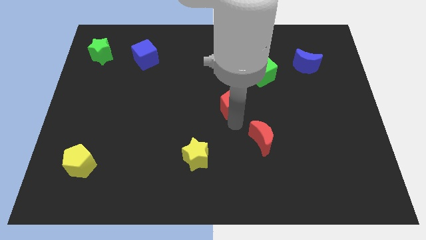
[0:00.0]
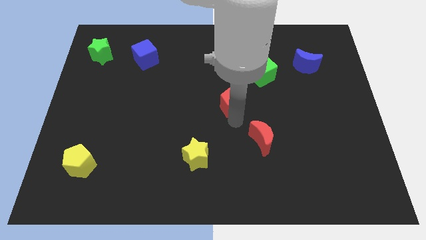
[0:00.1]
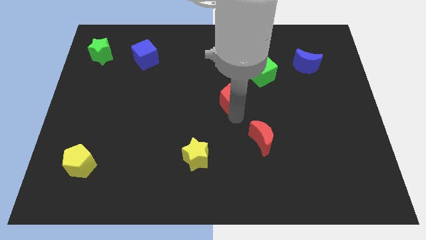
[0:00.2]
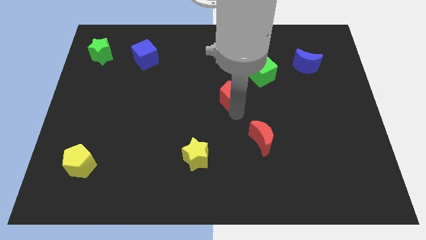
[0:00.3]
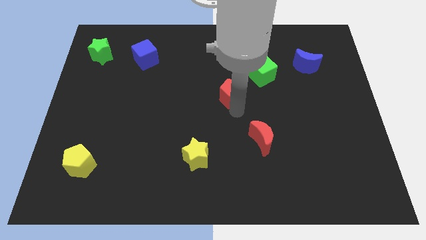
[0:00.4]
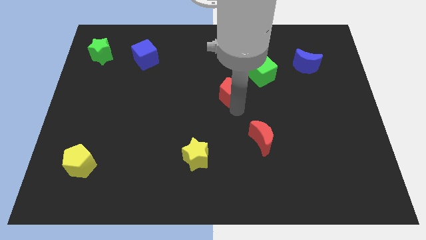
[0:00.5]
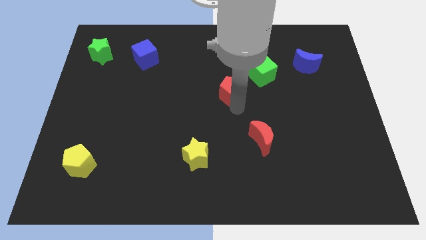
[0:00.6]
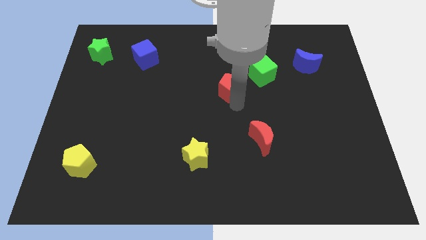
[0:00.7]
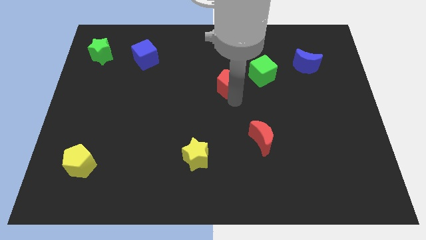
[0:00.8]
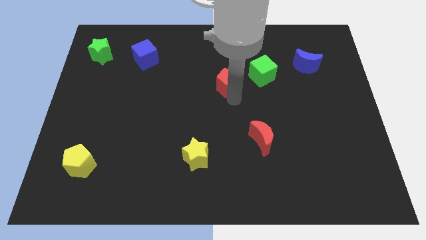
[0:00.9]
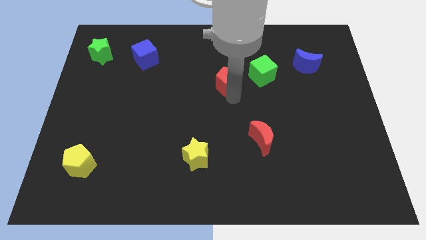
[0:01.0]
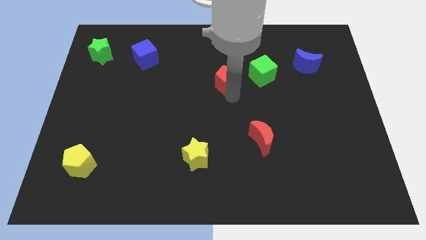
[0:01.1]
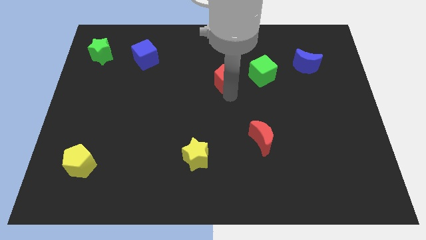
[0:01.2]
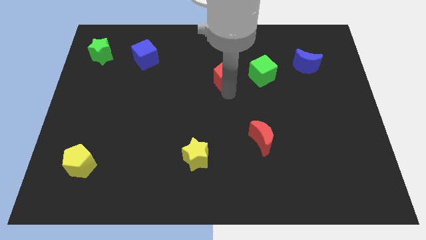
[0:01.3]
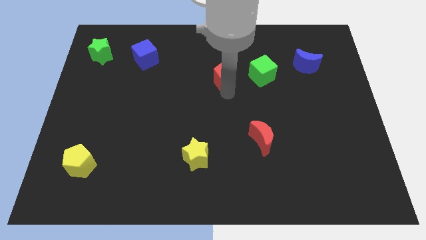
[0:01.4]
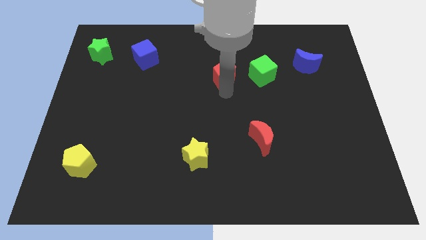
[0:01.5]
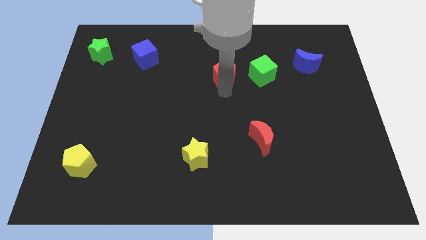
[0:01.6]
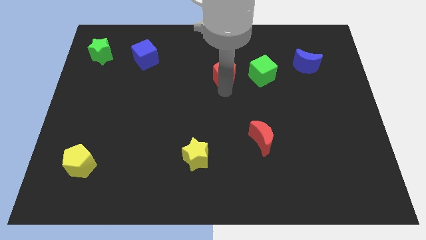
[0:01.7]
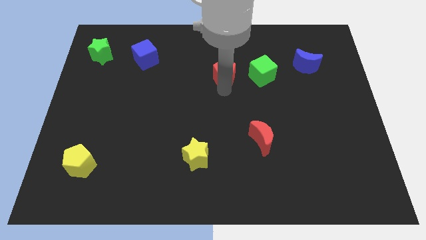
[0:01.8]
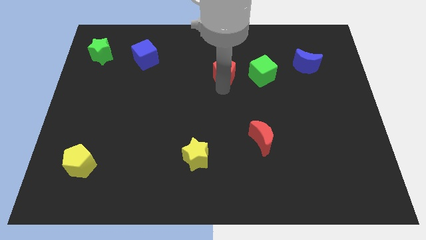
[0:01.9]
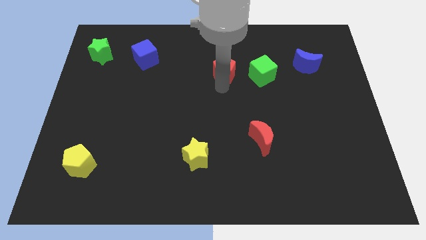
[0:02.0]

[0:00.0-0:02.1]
place the red pentagon parallel to green cube

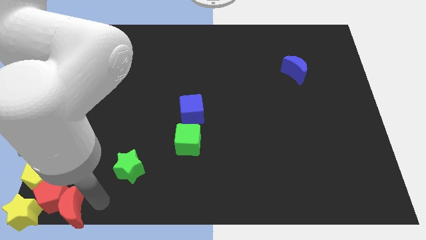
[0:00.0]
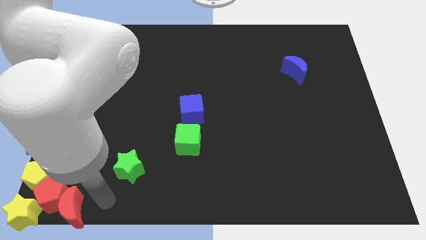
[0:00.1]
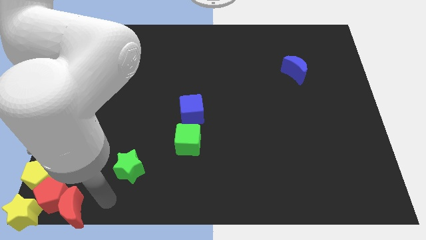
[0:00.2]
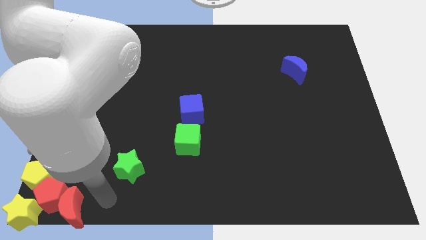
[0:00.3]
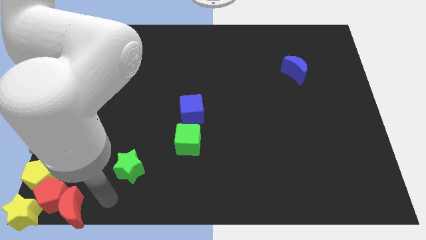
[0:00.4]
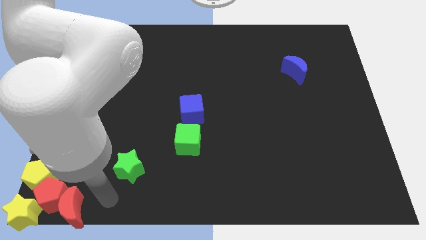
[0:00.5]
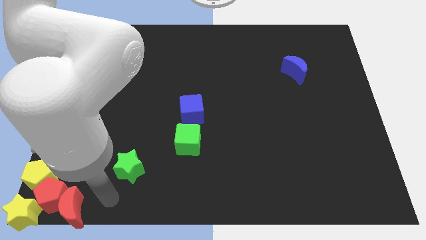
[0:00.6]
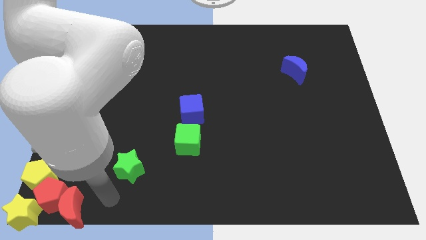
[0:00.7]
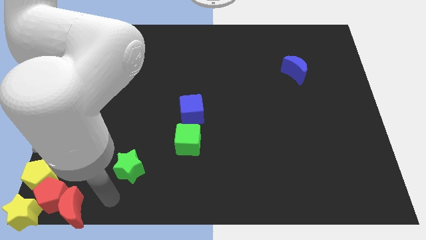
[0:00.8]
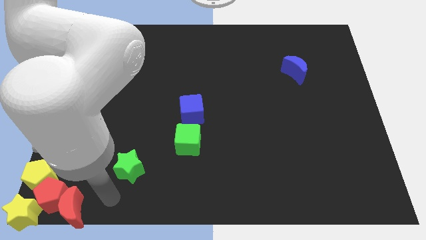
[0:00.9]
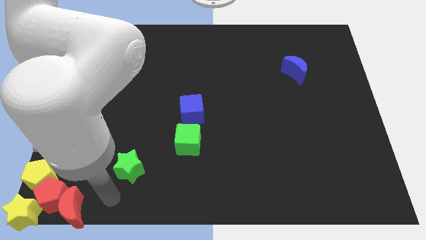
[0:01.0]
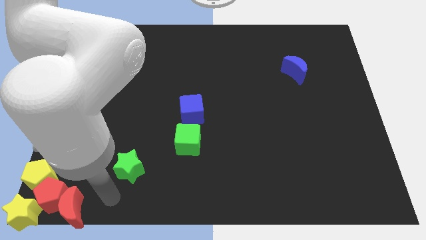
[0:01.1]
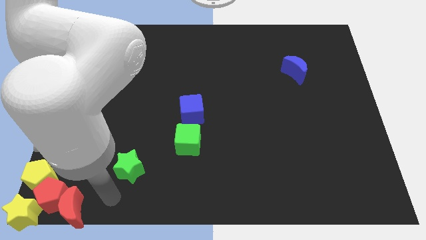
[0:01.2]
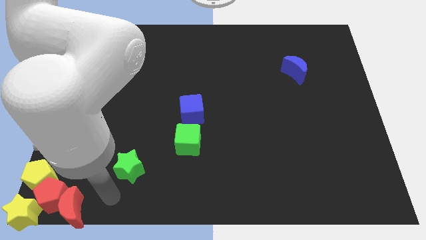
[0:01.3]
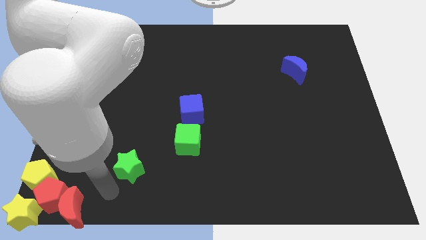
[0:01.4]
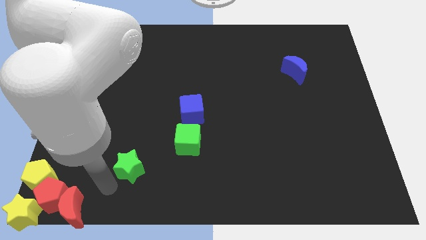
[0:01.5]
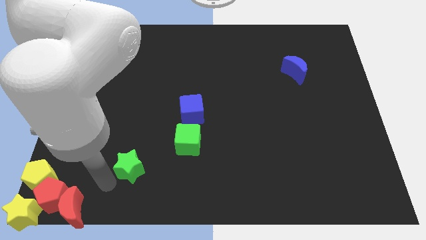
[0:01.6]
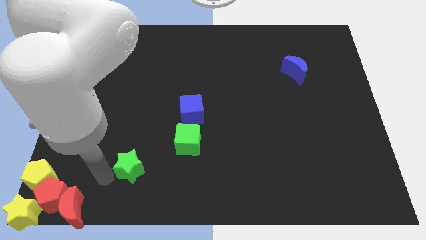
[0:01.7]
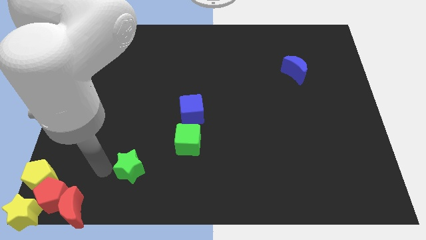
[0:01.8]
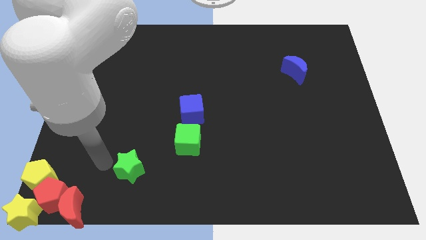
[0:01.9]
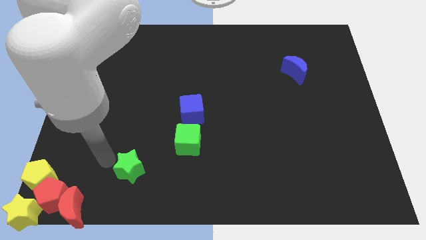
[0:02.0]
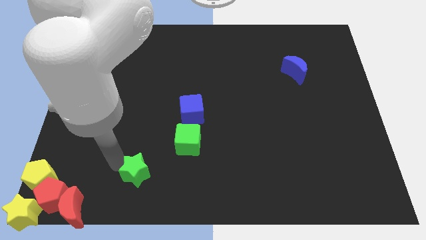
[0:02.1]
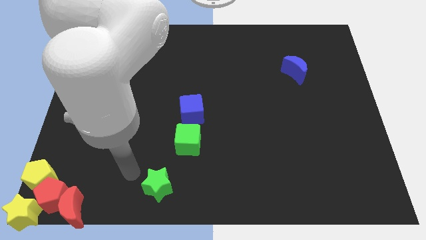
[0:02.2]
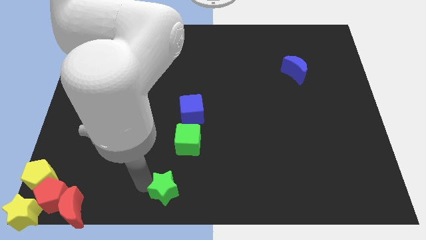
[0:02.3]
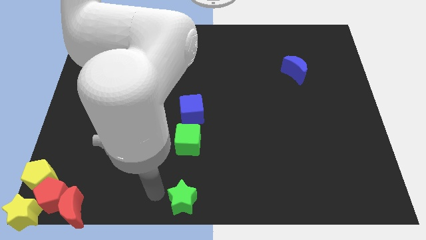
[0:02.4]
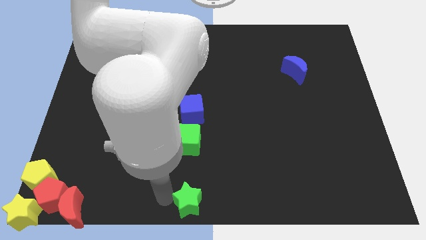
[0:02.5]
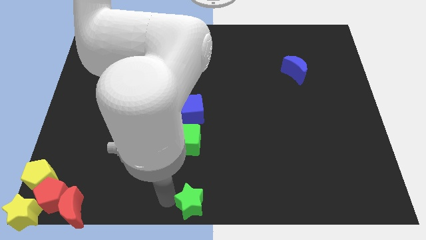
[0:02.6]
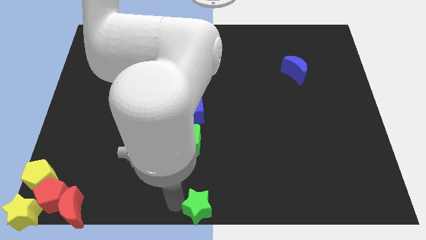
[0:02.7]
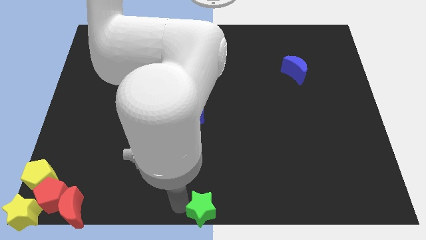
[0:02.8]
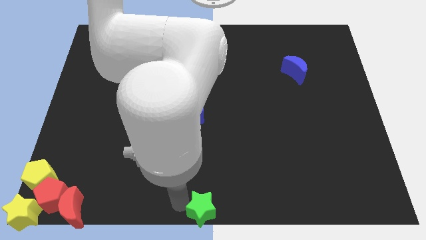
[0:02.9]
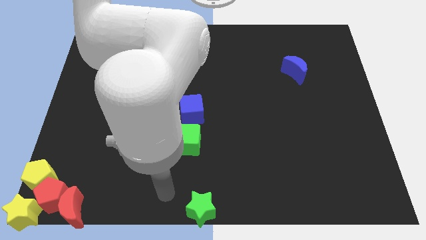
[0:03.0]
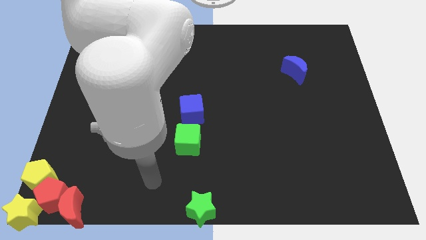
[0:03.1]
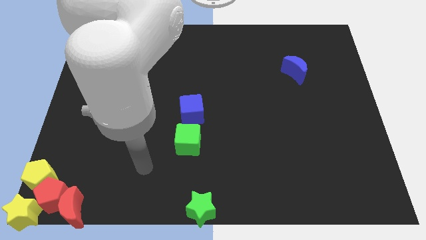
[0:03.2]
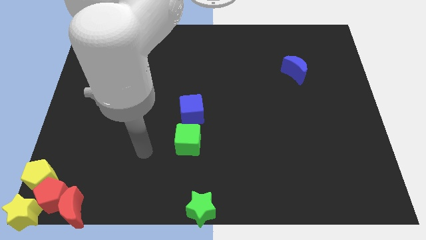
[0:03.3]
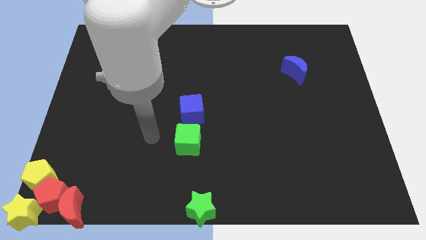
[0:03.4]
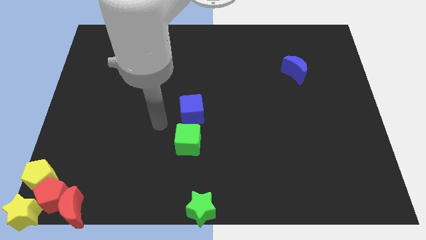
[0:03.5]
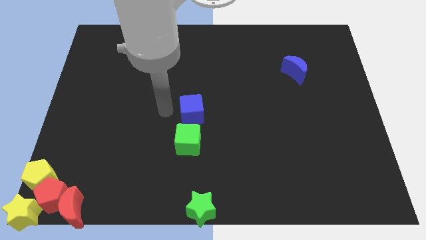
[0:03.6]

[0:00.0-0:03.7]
place the green star to the bottom middle of the board

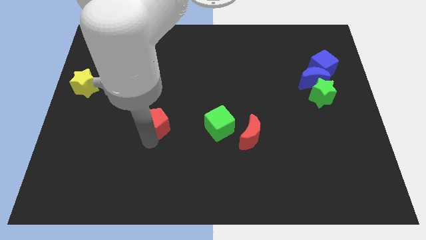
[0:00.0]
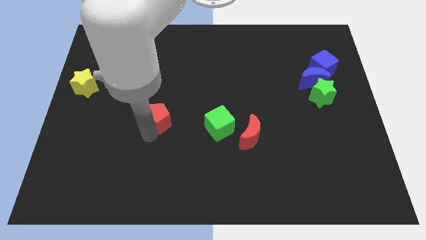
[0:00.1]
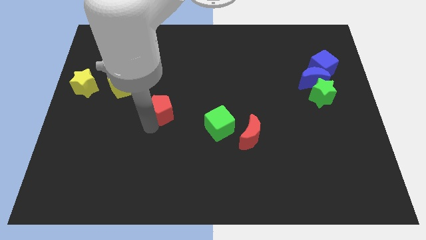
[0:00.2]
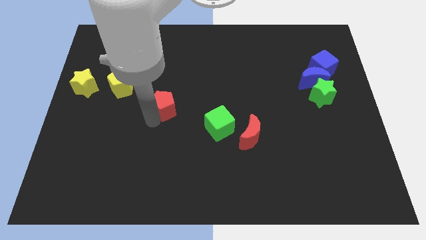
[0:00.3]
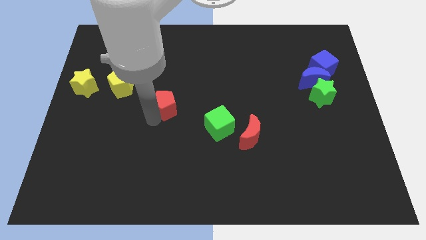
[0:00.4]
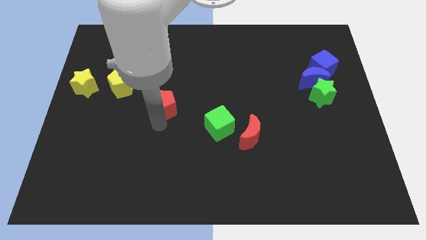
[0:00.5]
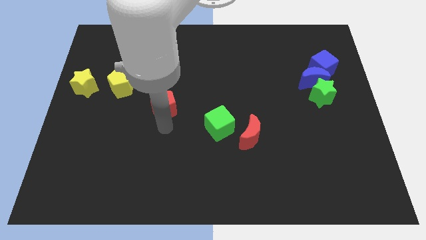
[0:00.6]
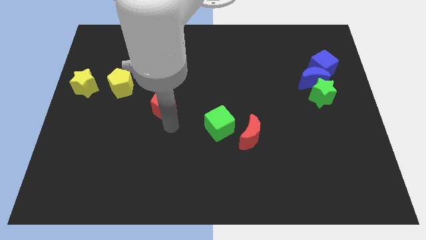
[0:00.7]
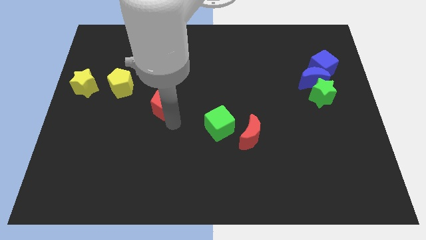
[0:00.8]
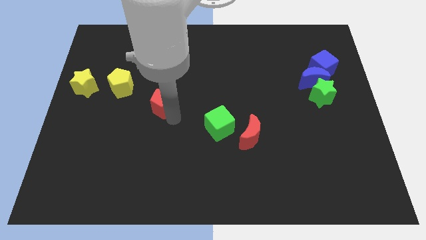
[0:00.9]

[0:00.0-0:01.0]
move the red pentagon to the top of the board

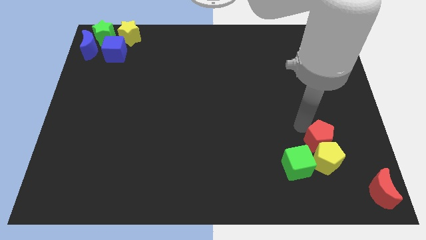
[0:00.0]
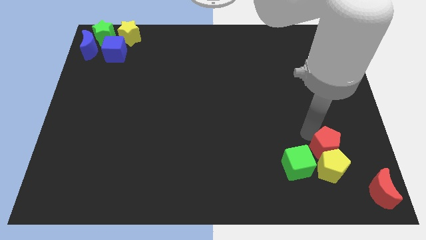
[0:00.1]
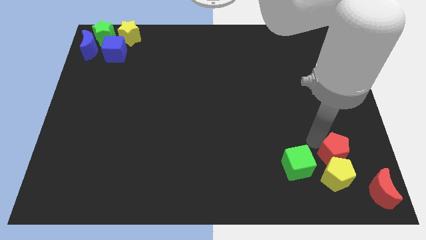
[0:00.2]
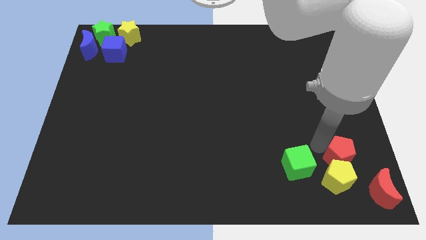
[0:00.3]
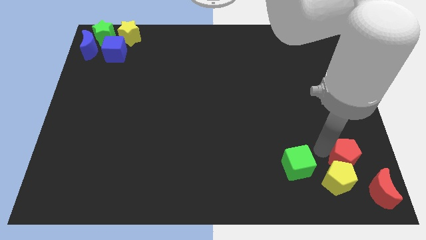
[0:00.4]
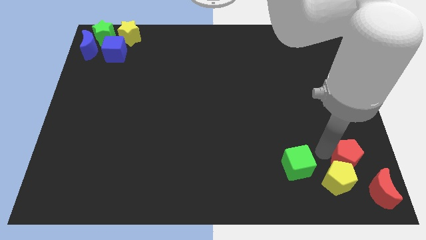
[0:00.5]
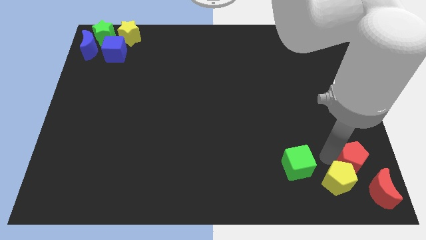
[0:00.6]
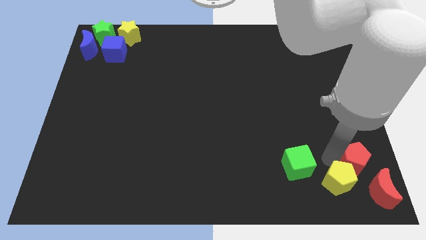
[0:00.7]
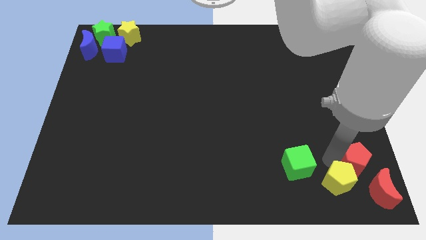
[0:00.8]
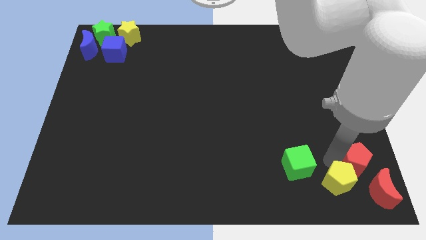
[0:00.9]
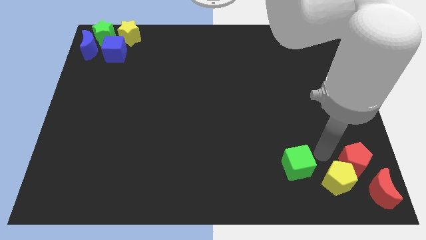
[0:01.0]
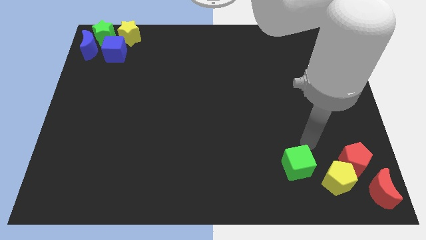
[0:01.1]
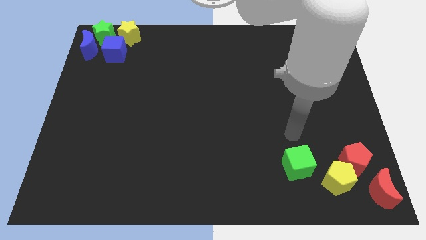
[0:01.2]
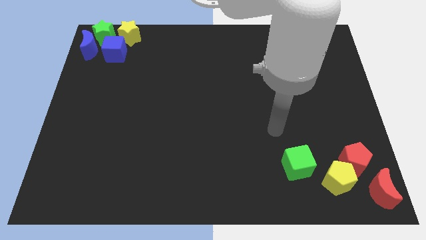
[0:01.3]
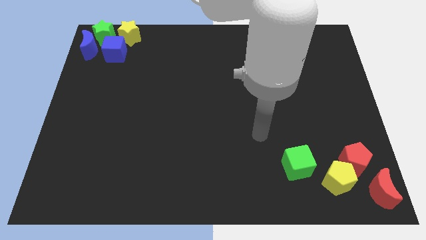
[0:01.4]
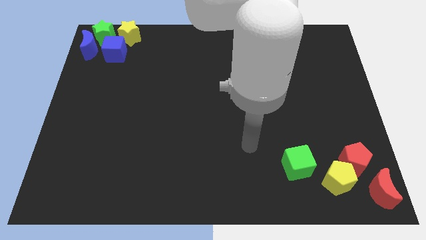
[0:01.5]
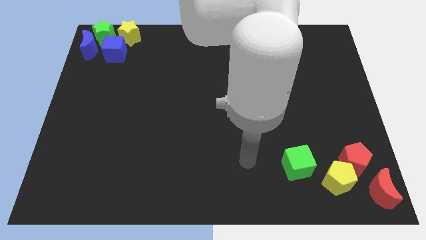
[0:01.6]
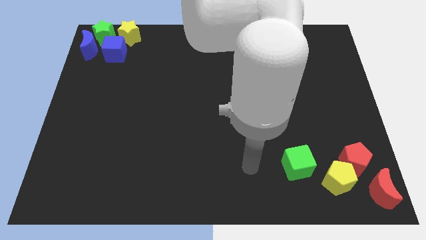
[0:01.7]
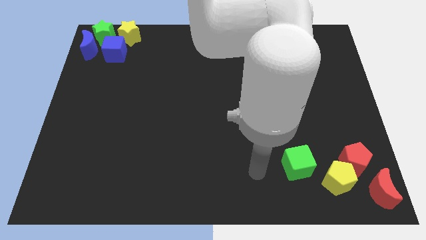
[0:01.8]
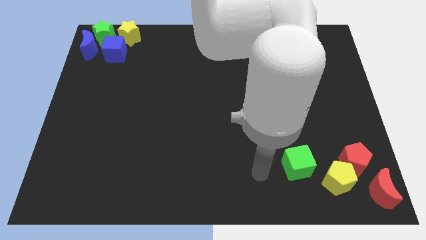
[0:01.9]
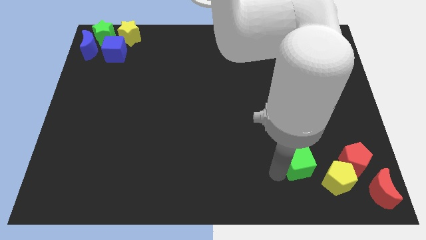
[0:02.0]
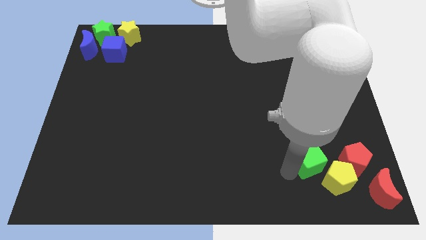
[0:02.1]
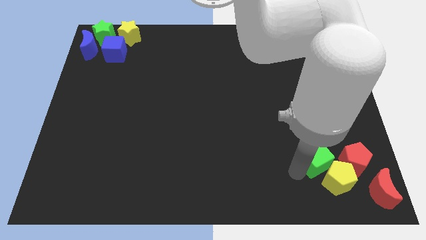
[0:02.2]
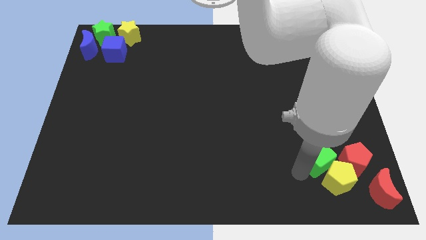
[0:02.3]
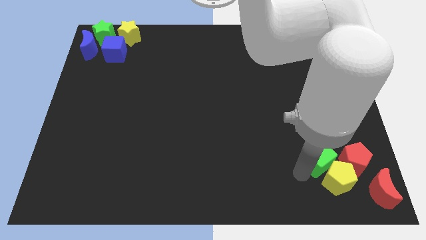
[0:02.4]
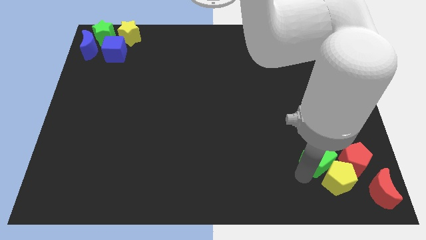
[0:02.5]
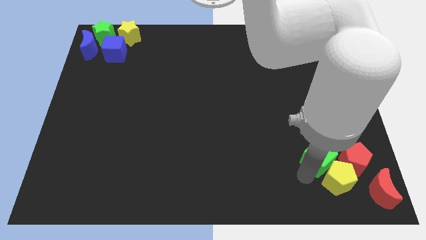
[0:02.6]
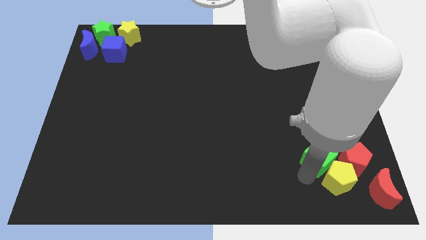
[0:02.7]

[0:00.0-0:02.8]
push green block into yellow and red pentagons
